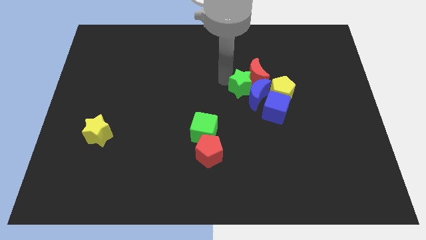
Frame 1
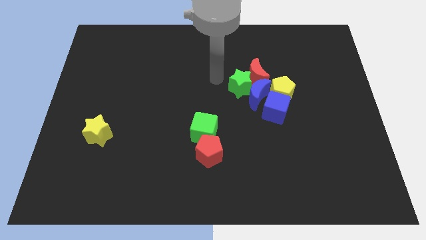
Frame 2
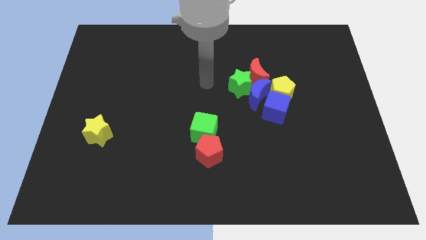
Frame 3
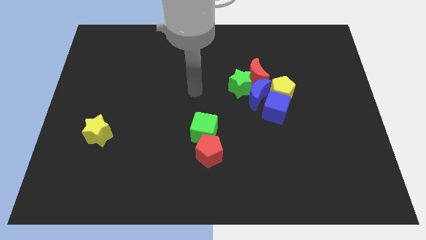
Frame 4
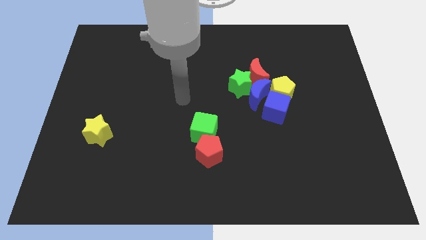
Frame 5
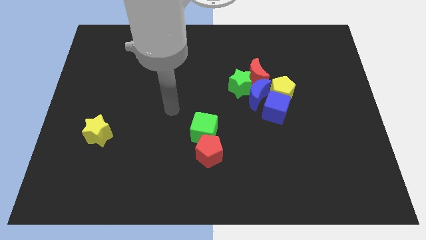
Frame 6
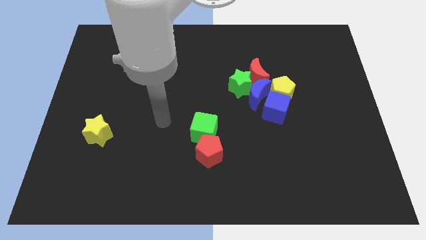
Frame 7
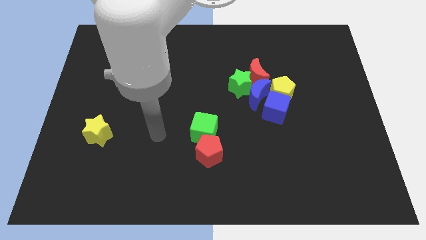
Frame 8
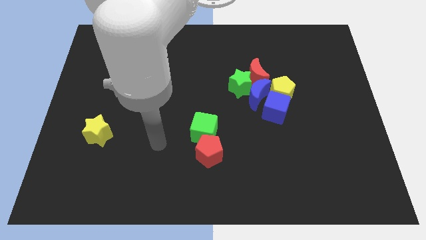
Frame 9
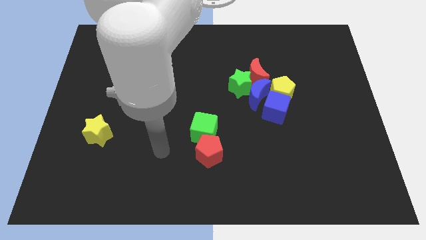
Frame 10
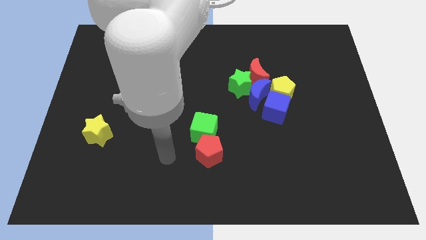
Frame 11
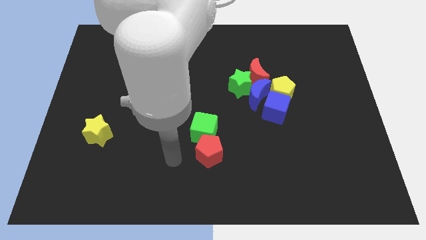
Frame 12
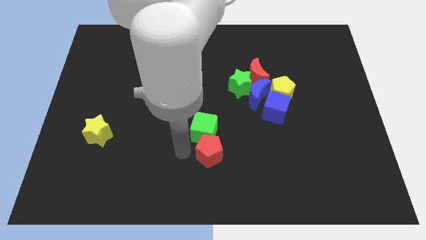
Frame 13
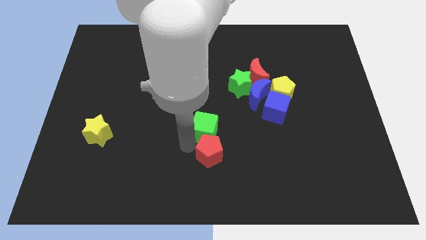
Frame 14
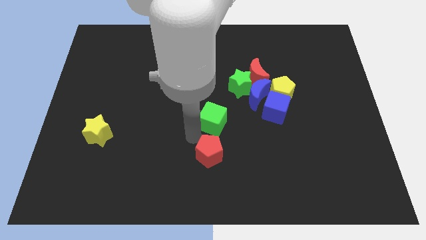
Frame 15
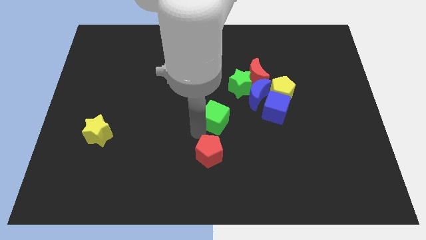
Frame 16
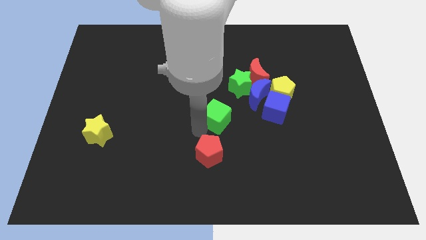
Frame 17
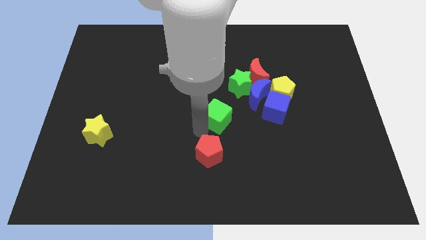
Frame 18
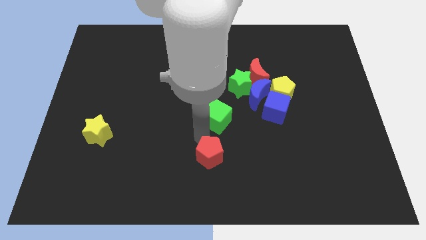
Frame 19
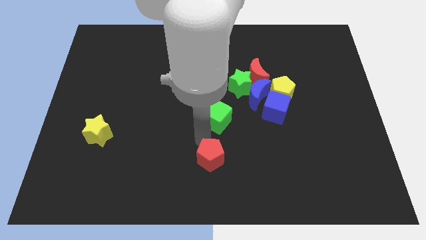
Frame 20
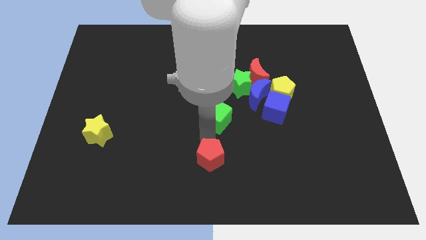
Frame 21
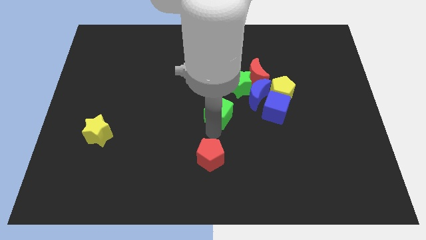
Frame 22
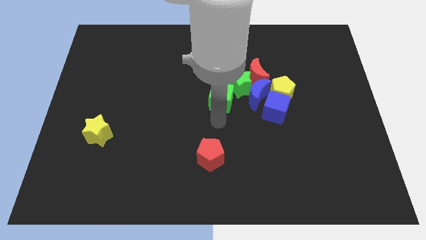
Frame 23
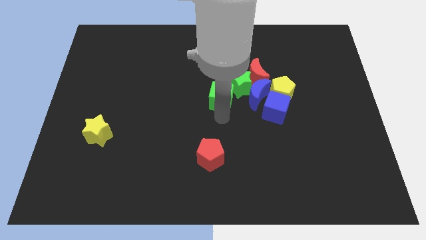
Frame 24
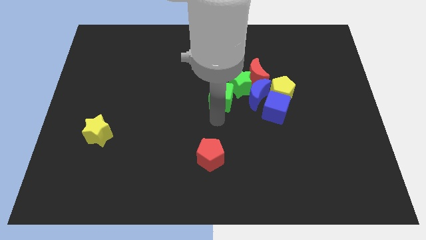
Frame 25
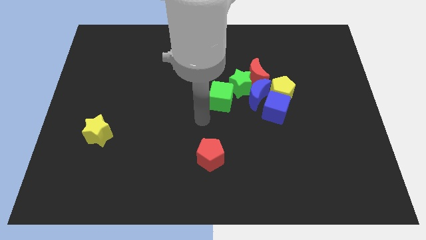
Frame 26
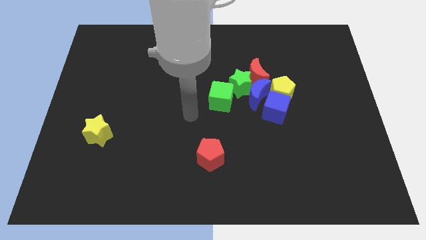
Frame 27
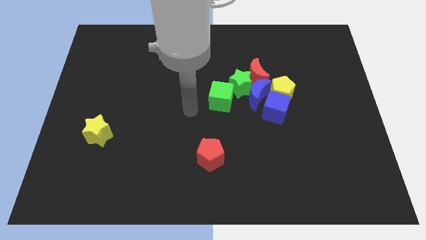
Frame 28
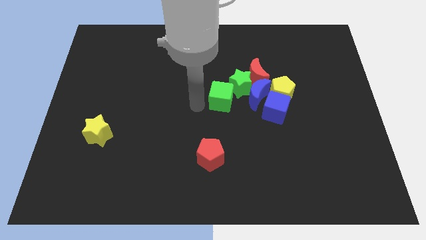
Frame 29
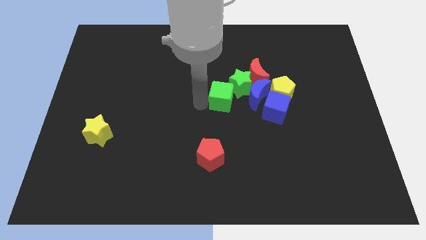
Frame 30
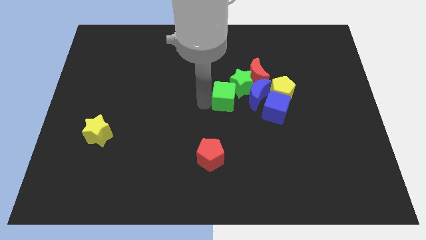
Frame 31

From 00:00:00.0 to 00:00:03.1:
separate the green cube from the red pentagon

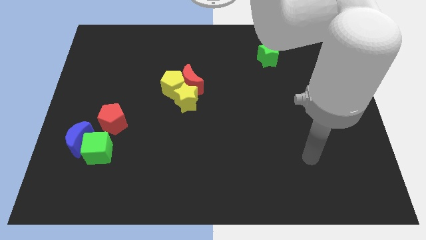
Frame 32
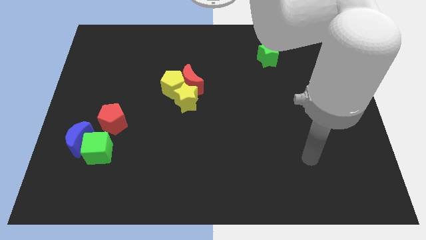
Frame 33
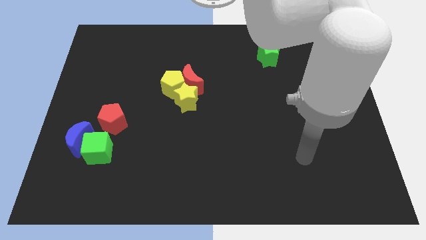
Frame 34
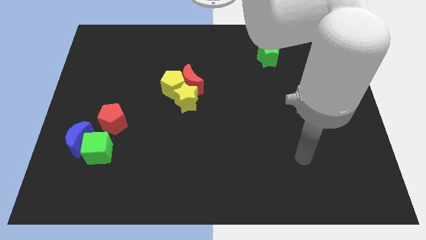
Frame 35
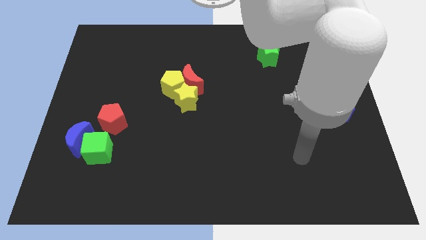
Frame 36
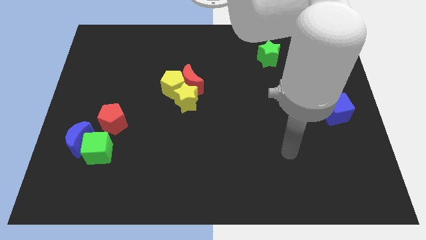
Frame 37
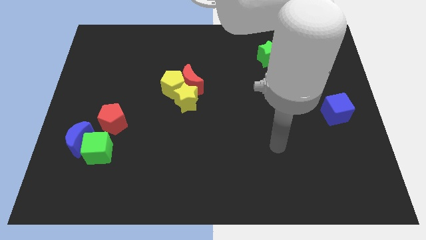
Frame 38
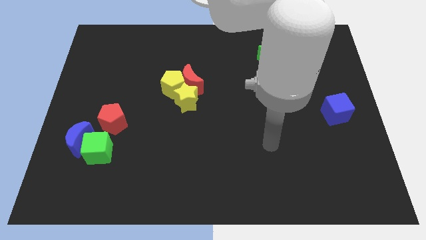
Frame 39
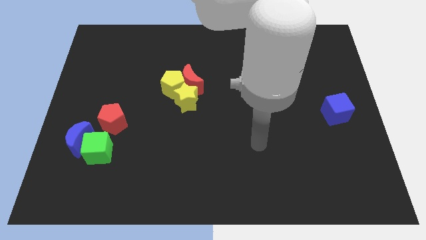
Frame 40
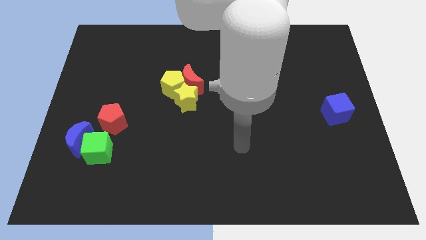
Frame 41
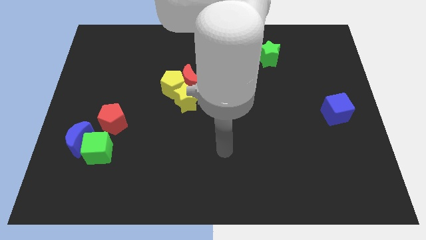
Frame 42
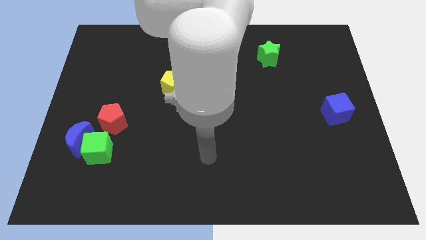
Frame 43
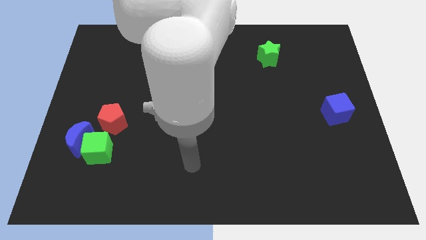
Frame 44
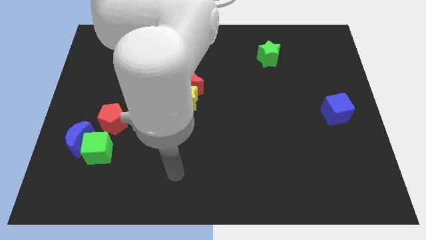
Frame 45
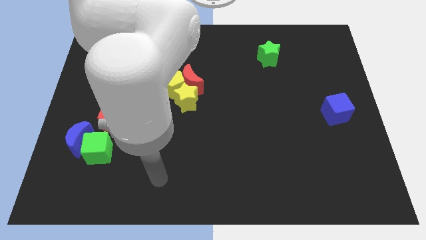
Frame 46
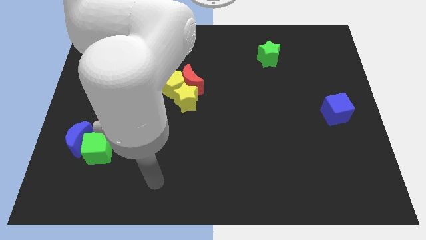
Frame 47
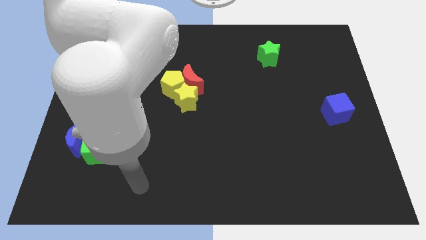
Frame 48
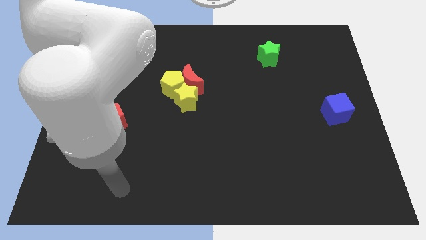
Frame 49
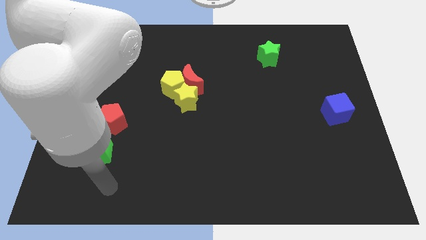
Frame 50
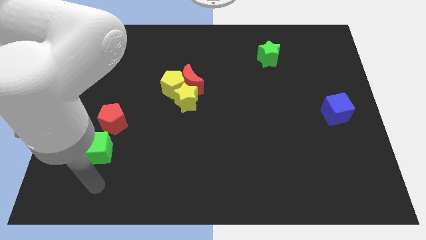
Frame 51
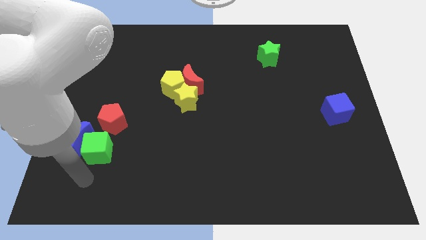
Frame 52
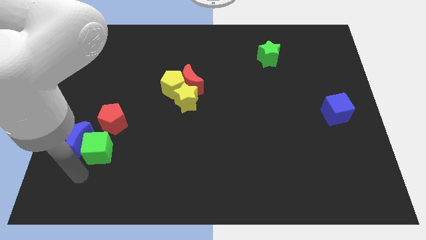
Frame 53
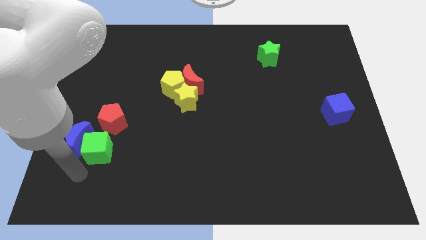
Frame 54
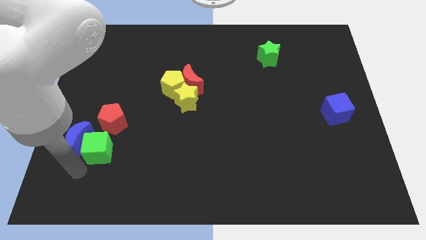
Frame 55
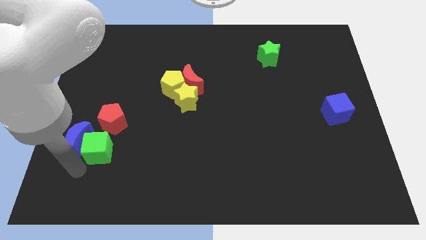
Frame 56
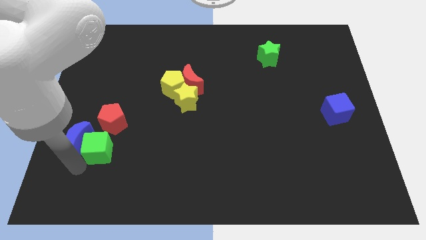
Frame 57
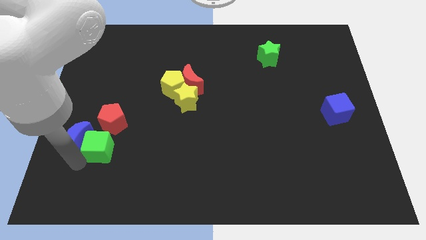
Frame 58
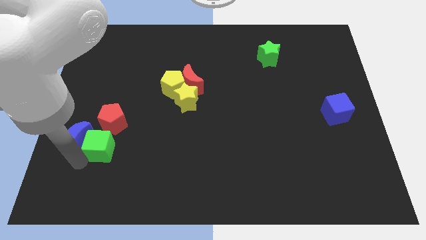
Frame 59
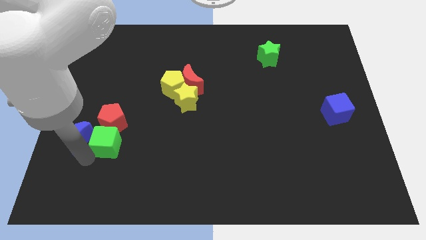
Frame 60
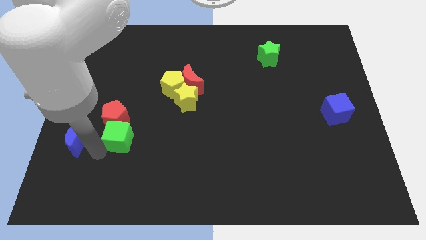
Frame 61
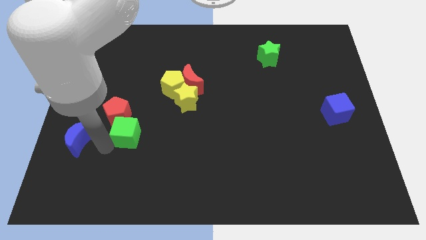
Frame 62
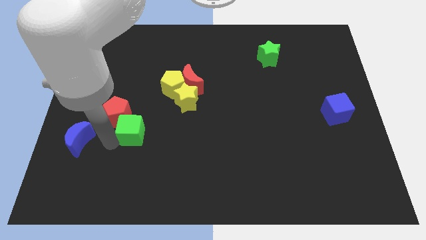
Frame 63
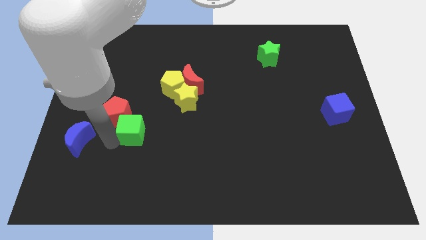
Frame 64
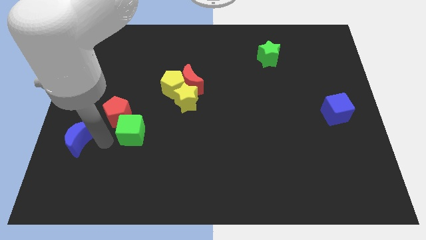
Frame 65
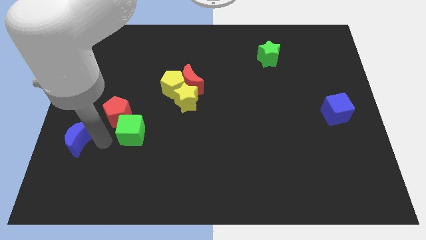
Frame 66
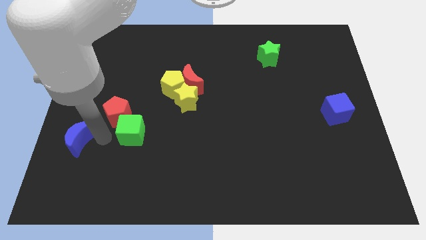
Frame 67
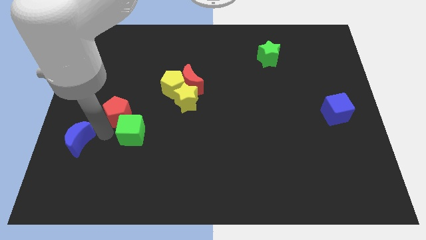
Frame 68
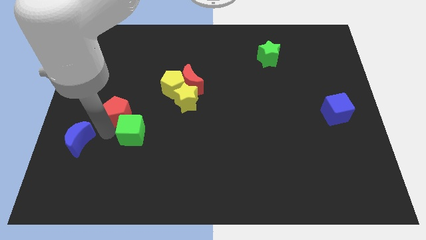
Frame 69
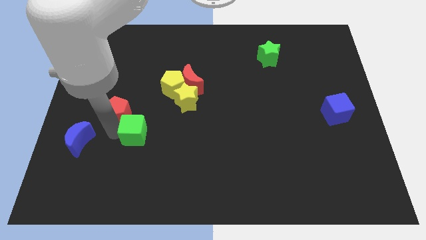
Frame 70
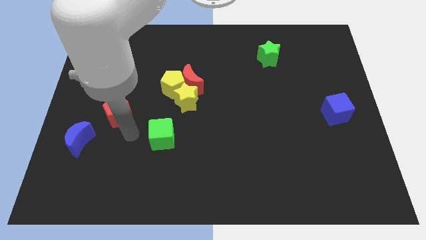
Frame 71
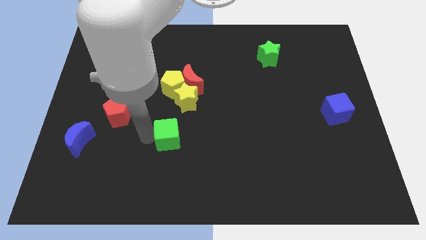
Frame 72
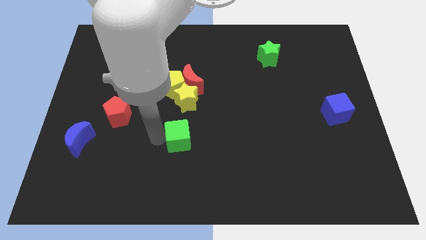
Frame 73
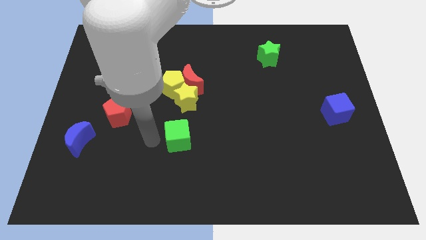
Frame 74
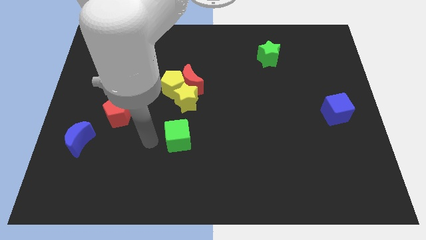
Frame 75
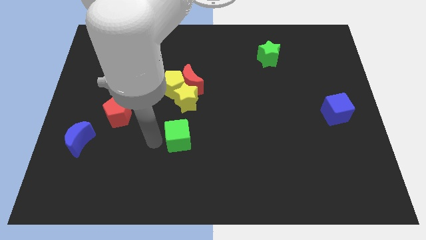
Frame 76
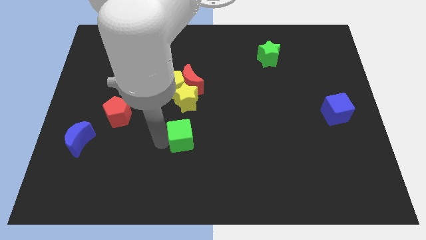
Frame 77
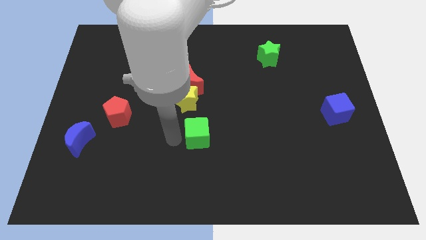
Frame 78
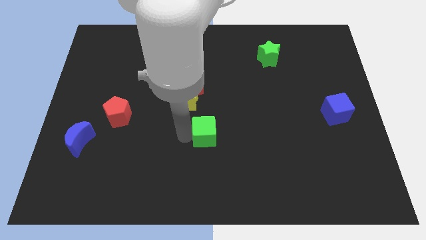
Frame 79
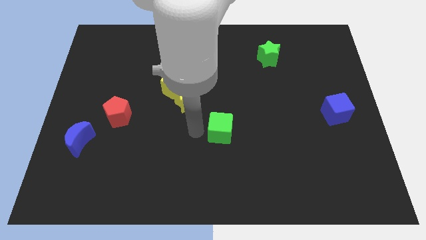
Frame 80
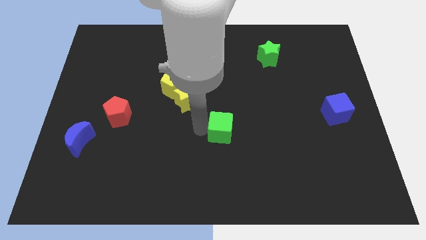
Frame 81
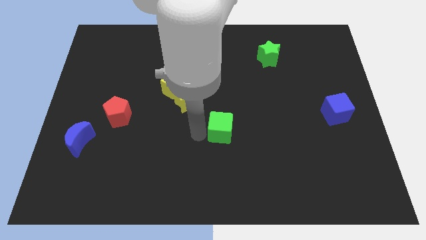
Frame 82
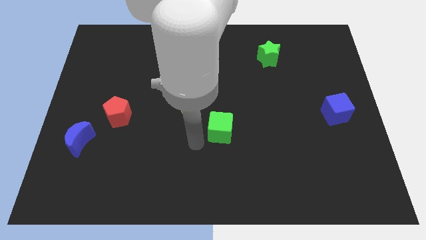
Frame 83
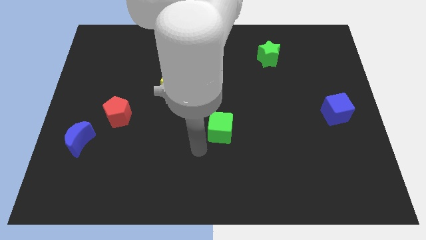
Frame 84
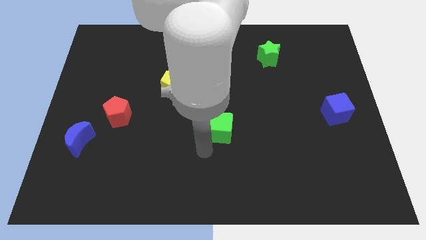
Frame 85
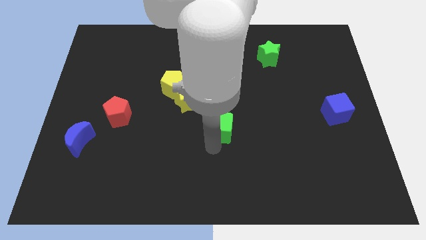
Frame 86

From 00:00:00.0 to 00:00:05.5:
move the green cube to the center

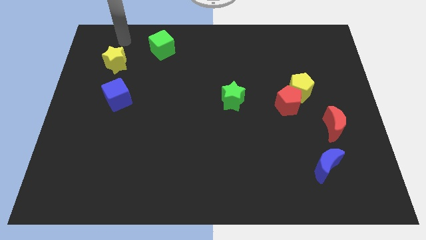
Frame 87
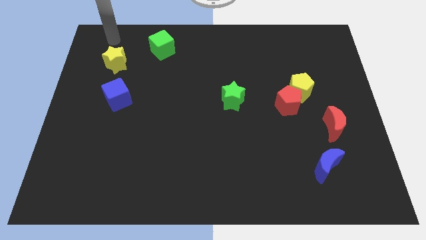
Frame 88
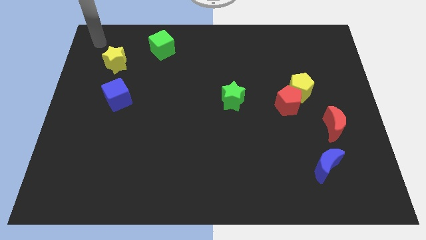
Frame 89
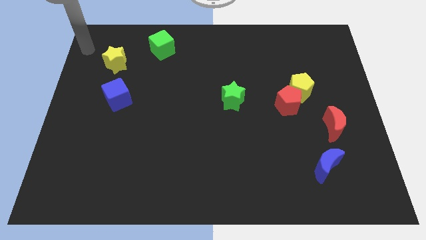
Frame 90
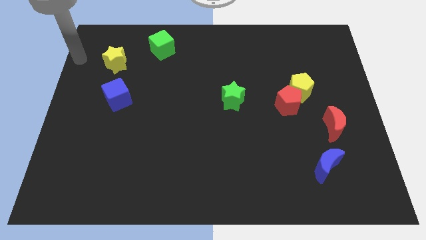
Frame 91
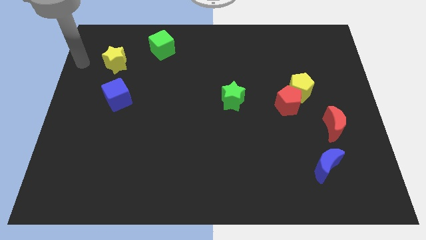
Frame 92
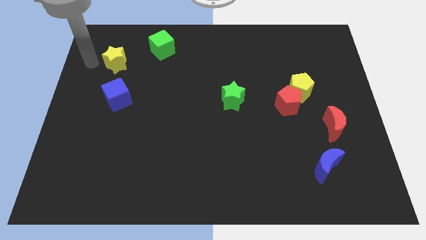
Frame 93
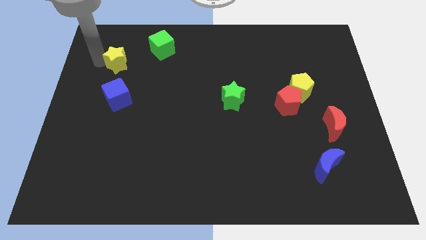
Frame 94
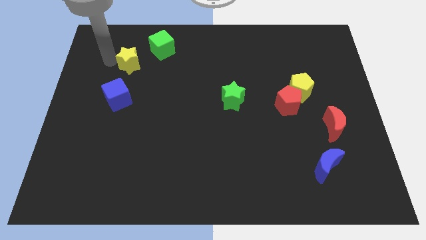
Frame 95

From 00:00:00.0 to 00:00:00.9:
place the arm left to the yellow star
